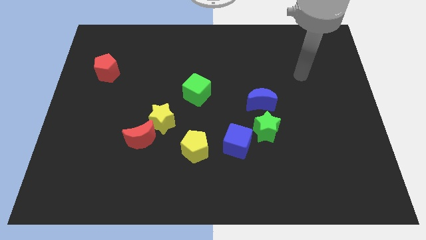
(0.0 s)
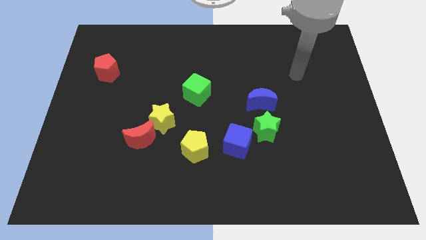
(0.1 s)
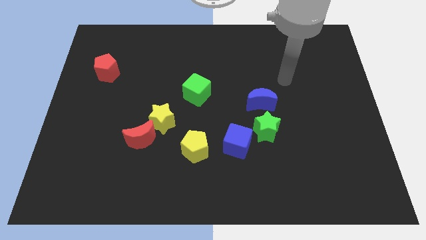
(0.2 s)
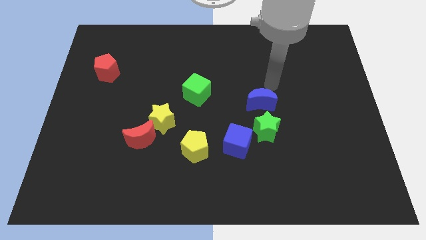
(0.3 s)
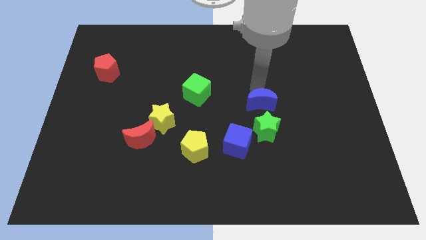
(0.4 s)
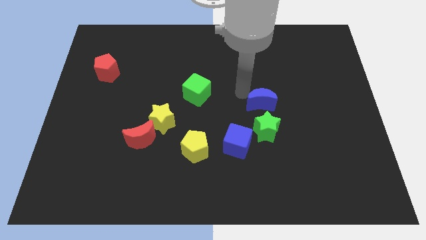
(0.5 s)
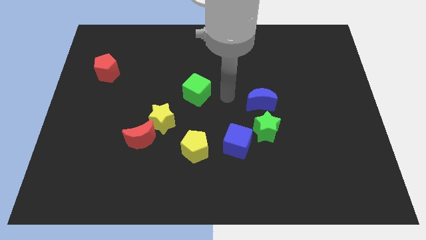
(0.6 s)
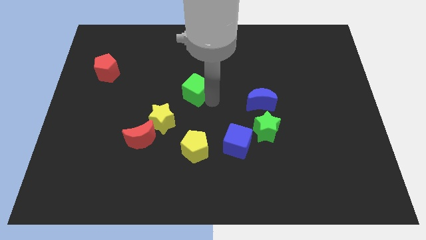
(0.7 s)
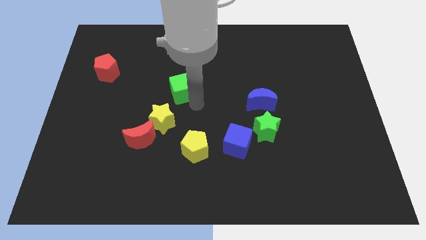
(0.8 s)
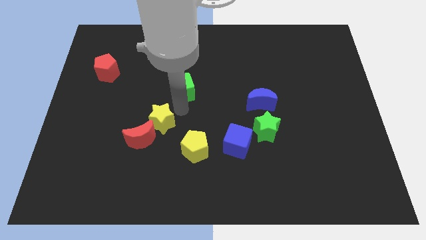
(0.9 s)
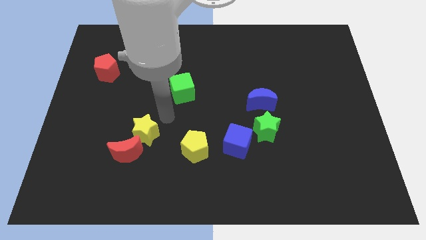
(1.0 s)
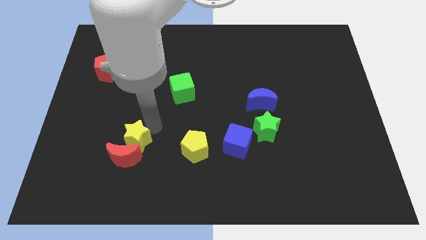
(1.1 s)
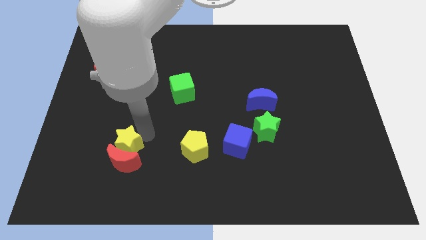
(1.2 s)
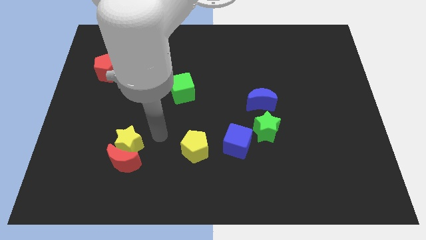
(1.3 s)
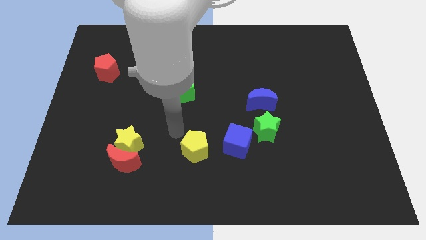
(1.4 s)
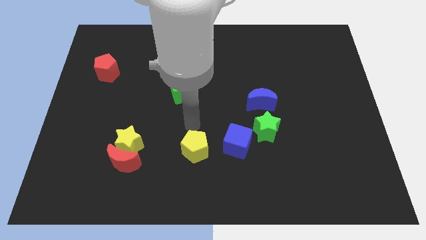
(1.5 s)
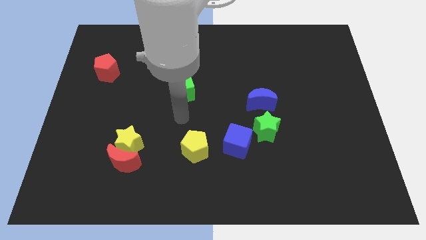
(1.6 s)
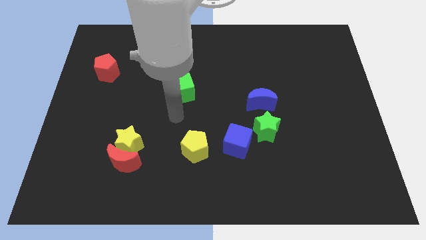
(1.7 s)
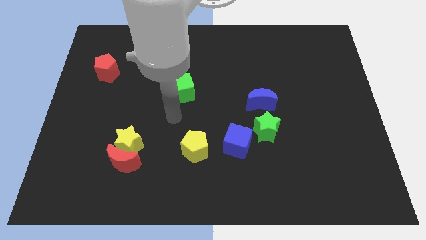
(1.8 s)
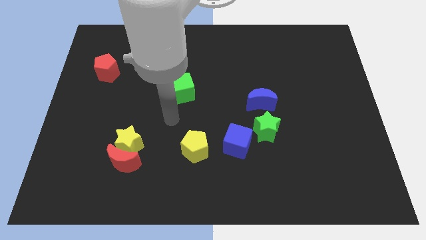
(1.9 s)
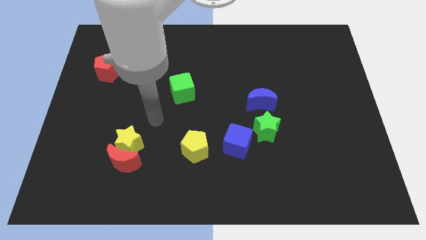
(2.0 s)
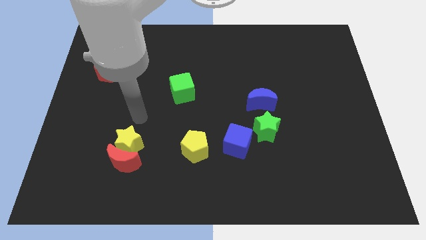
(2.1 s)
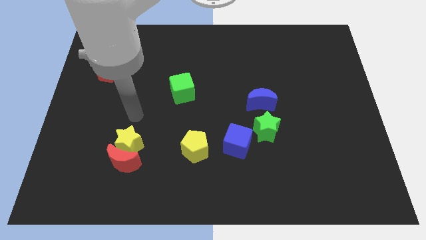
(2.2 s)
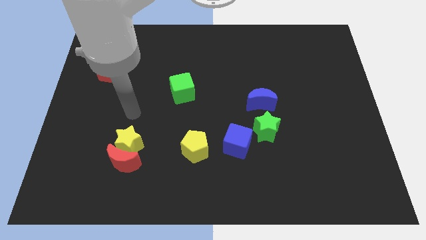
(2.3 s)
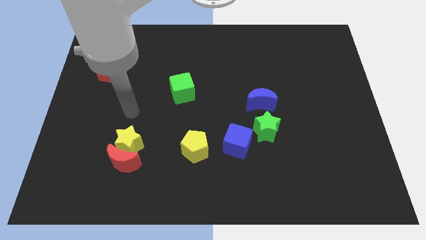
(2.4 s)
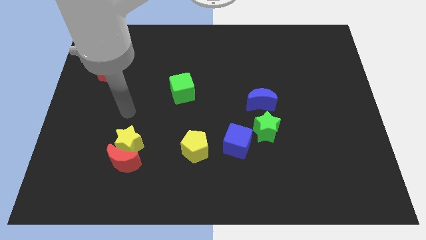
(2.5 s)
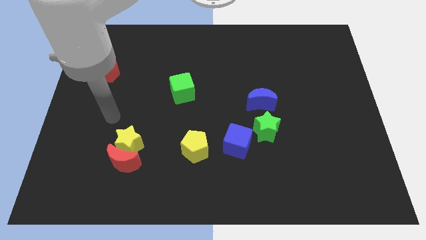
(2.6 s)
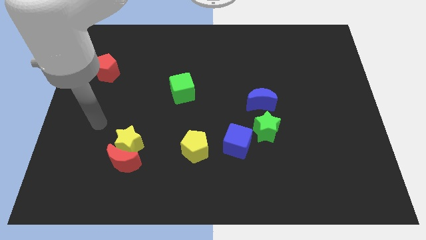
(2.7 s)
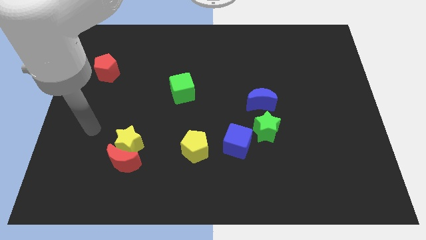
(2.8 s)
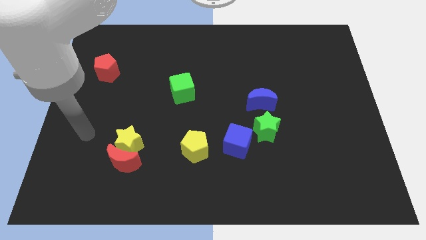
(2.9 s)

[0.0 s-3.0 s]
push the yellow star close to red crescent

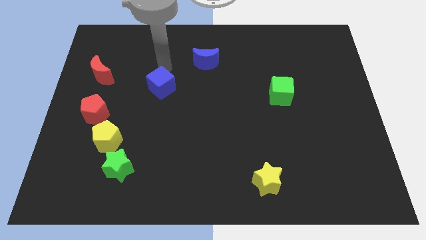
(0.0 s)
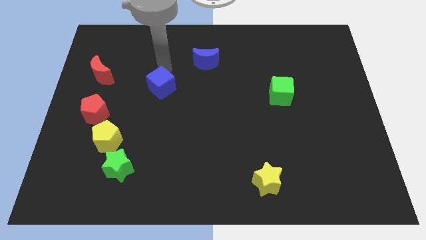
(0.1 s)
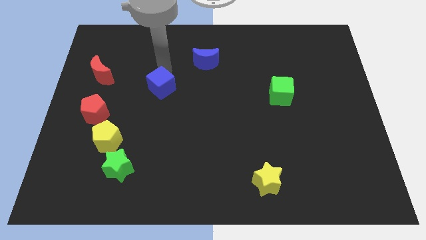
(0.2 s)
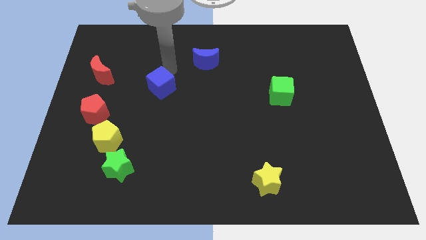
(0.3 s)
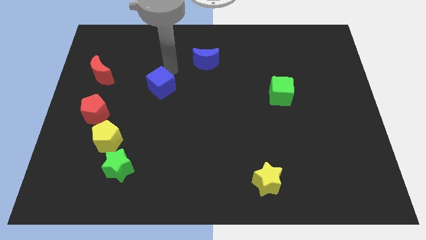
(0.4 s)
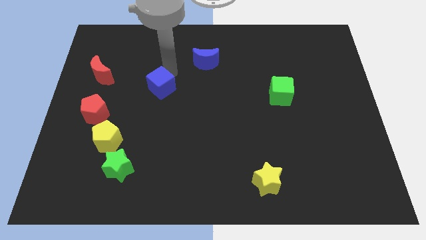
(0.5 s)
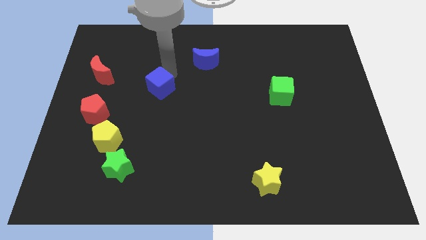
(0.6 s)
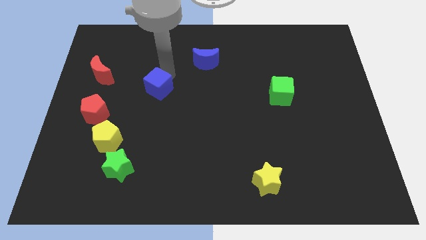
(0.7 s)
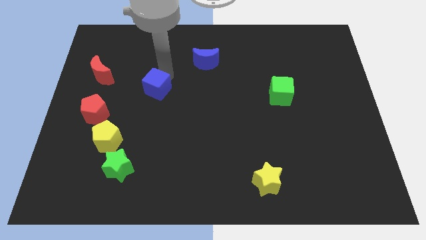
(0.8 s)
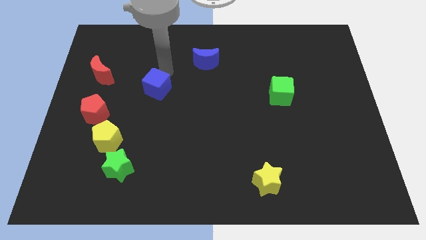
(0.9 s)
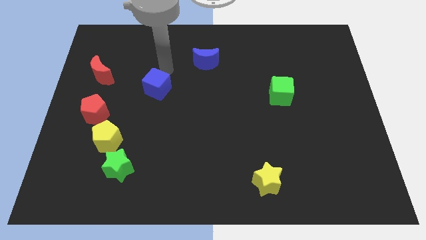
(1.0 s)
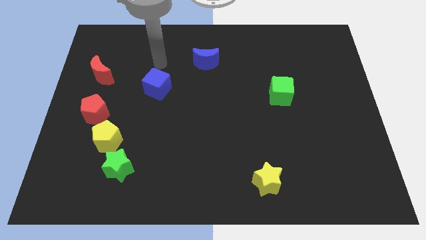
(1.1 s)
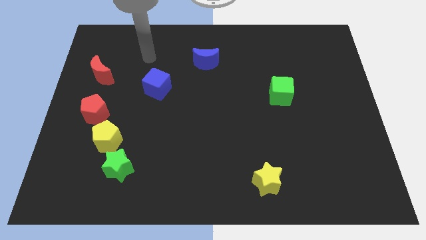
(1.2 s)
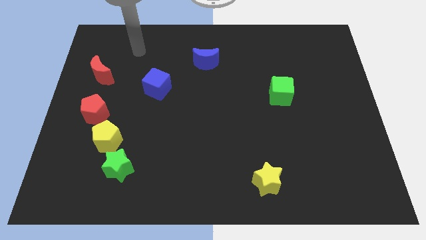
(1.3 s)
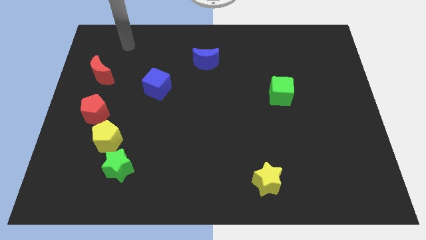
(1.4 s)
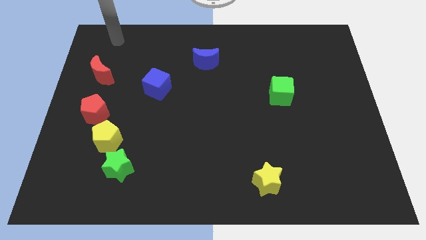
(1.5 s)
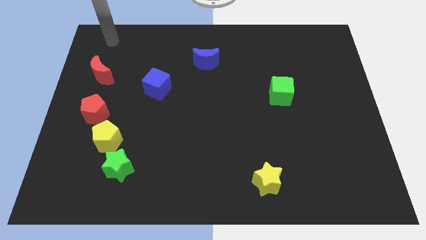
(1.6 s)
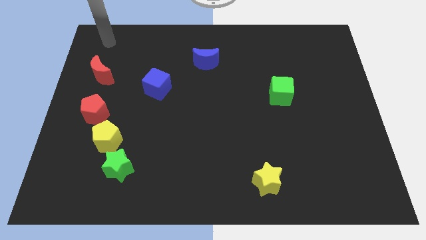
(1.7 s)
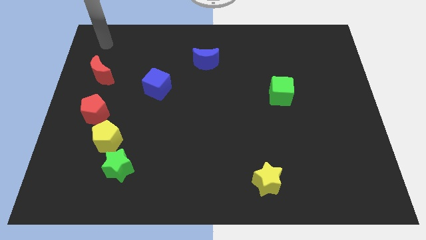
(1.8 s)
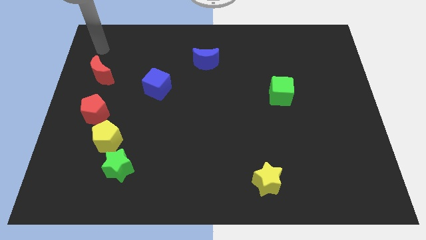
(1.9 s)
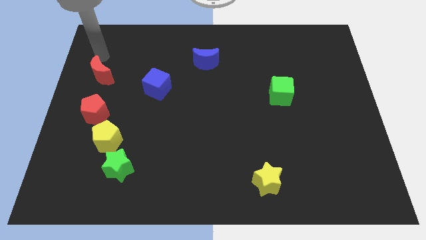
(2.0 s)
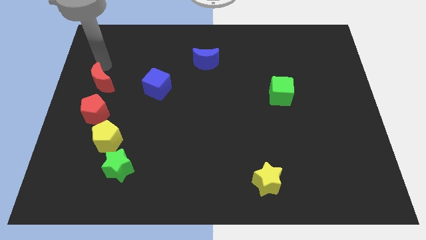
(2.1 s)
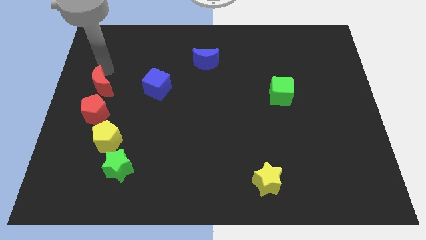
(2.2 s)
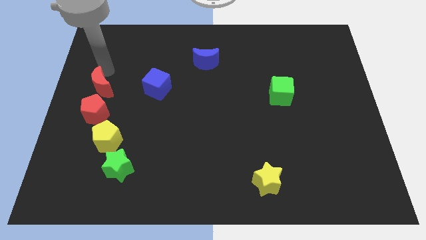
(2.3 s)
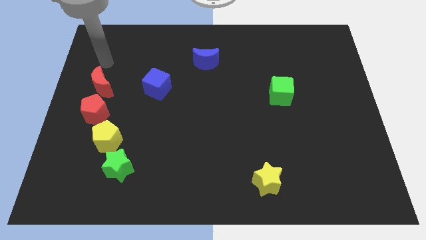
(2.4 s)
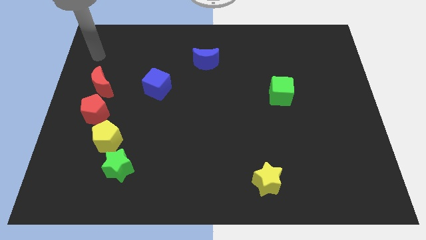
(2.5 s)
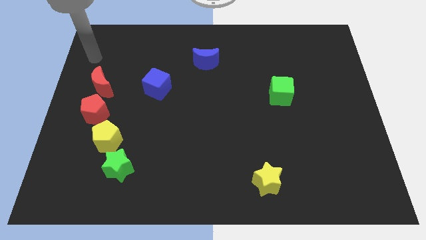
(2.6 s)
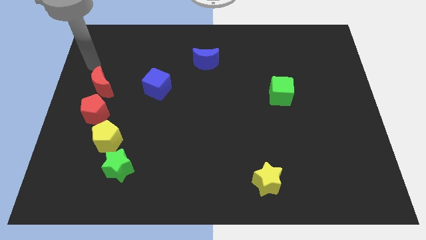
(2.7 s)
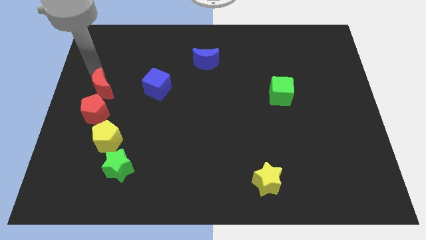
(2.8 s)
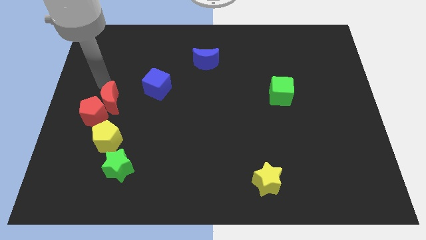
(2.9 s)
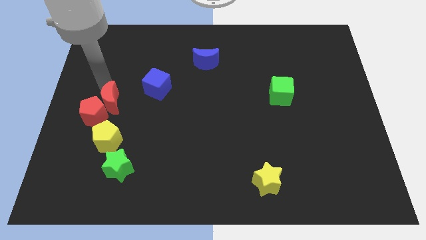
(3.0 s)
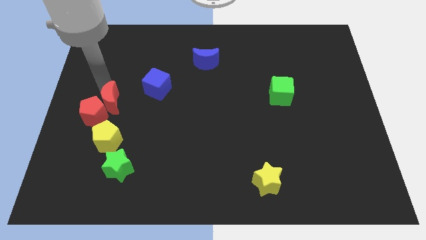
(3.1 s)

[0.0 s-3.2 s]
move your arm to the red moon

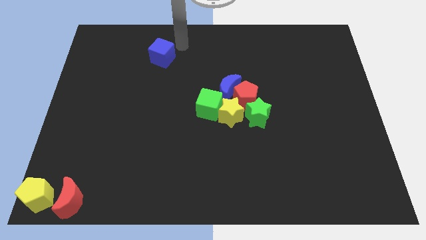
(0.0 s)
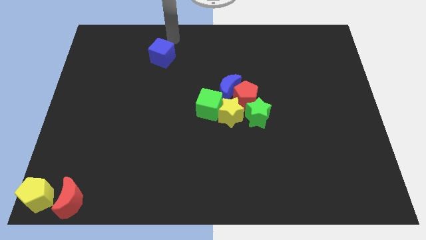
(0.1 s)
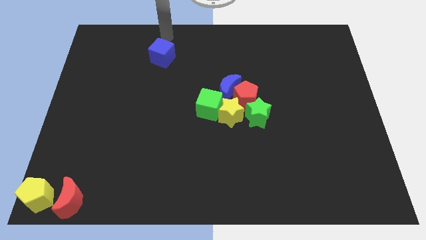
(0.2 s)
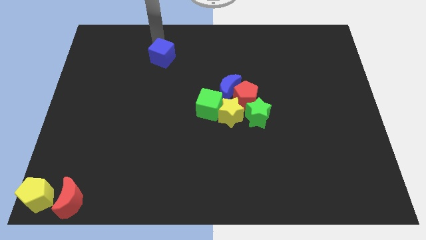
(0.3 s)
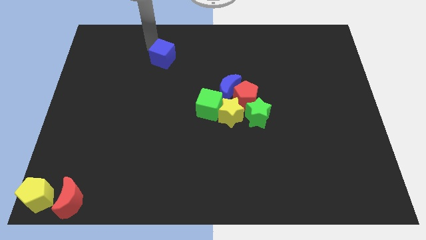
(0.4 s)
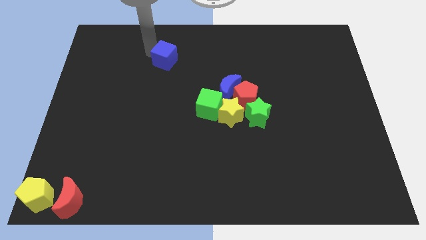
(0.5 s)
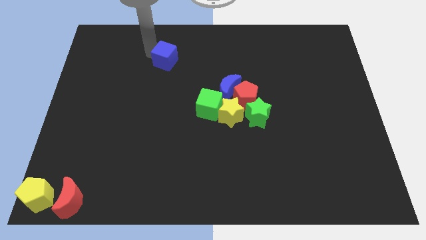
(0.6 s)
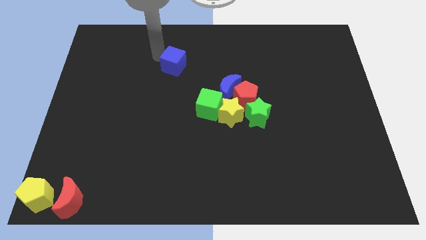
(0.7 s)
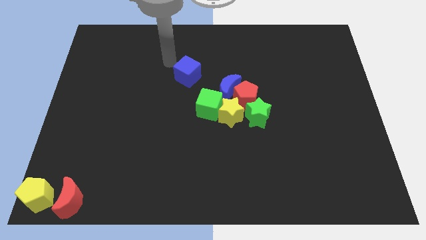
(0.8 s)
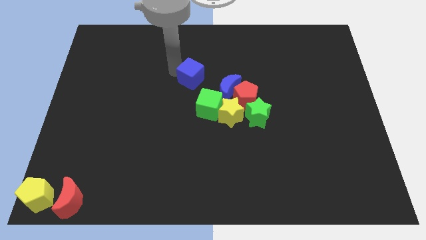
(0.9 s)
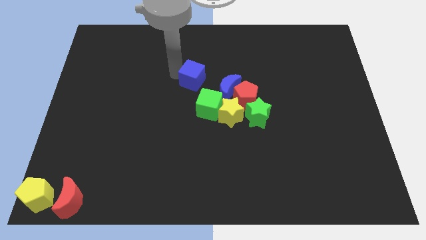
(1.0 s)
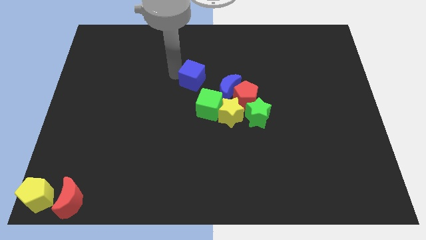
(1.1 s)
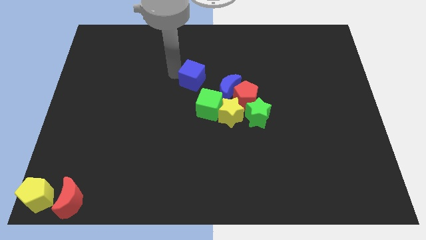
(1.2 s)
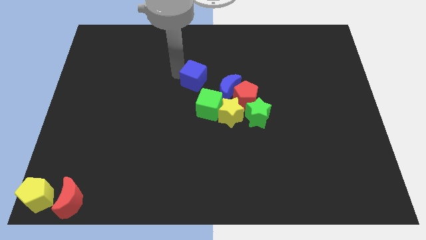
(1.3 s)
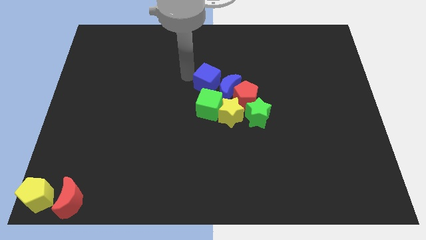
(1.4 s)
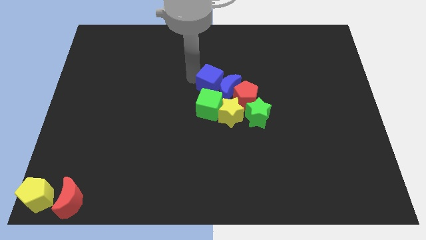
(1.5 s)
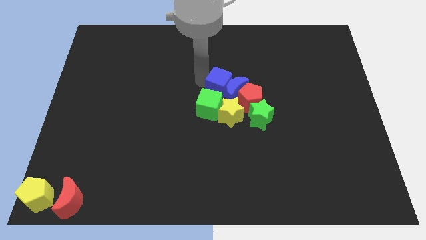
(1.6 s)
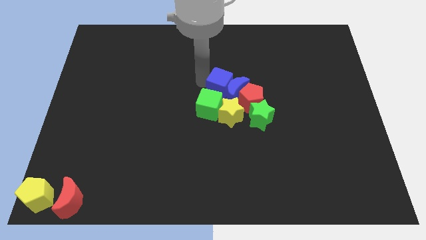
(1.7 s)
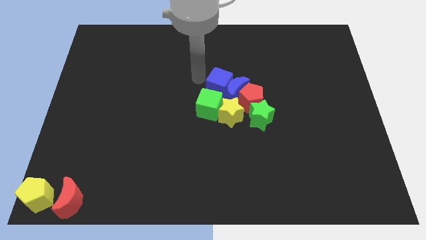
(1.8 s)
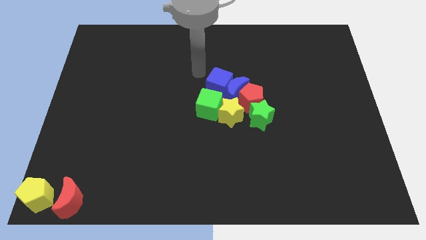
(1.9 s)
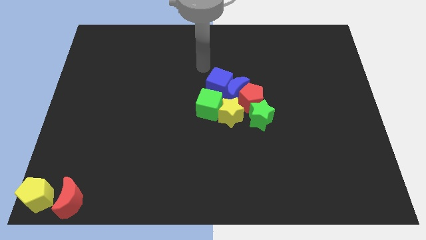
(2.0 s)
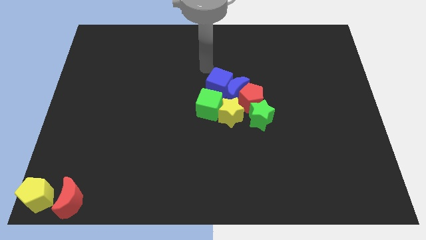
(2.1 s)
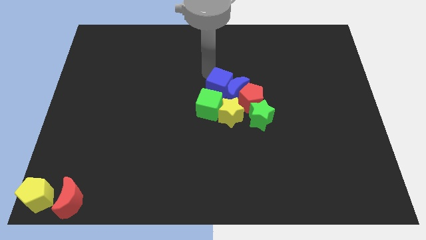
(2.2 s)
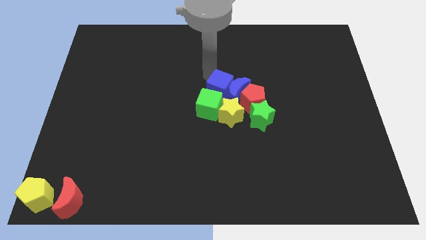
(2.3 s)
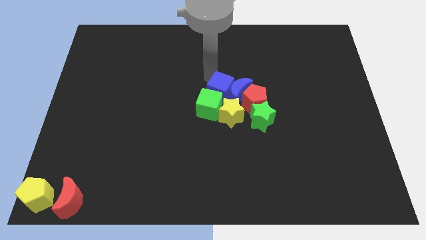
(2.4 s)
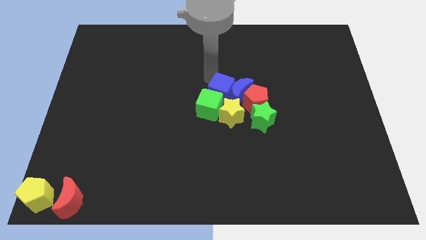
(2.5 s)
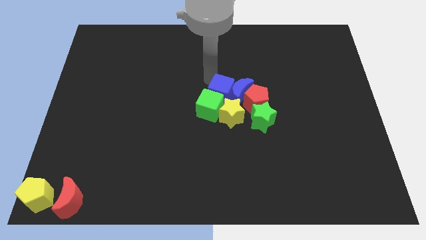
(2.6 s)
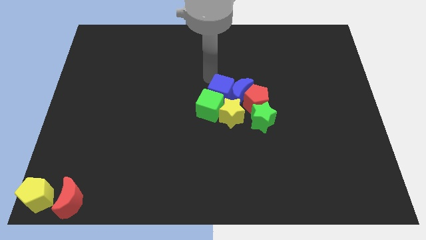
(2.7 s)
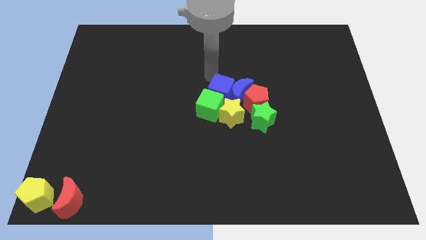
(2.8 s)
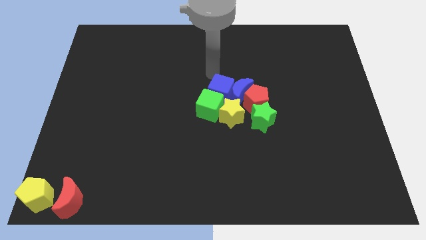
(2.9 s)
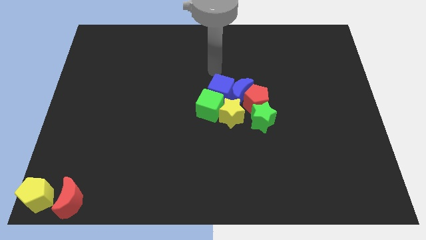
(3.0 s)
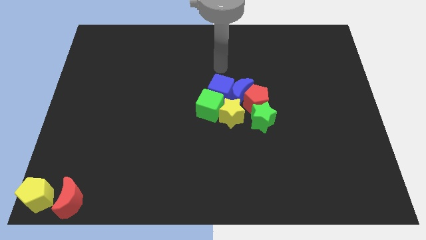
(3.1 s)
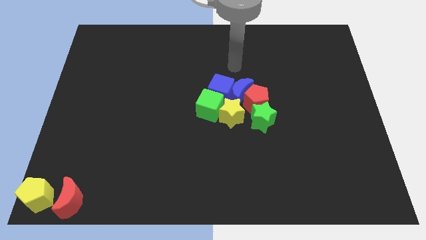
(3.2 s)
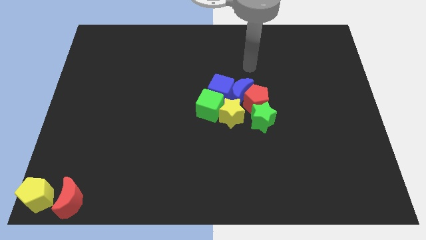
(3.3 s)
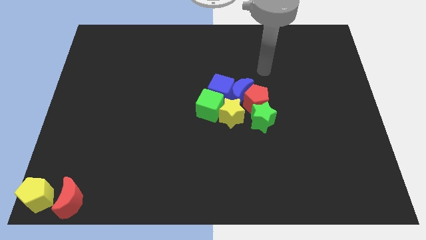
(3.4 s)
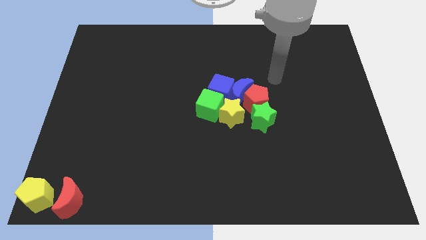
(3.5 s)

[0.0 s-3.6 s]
put the blue cube on top of the green cube
